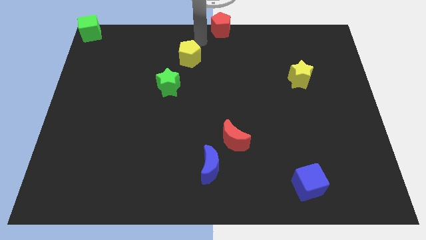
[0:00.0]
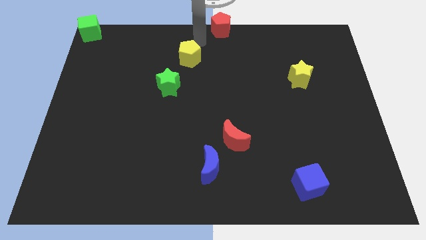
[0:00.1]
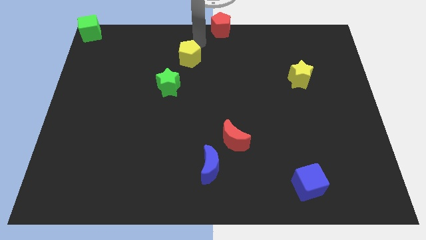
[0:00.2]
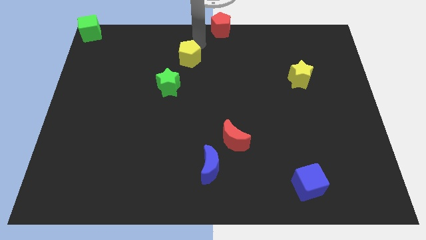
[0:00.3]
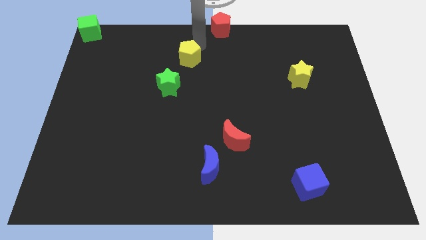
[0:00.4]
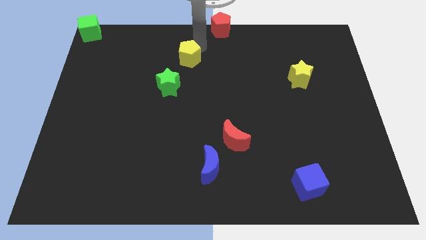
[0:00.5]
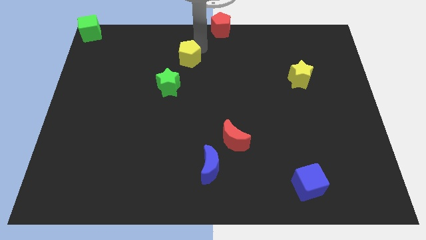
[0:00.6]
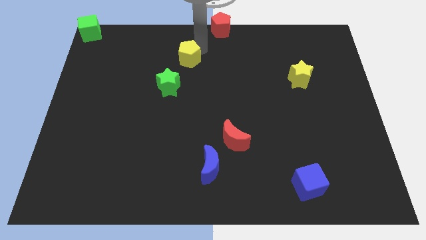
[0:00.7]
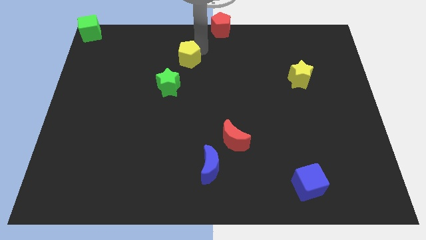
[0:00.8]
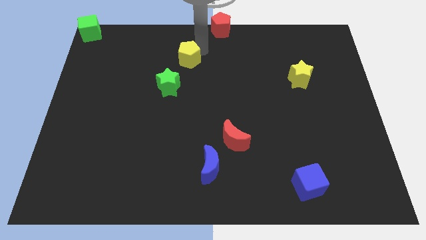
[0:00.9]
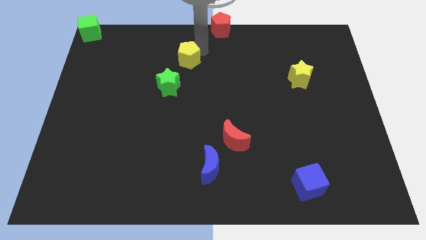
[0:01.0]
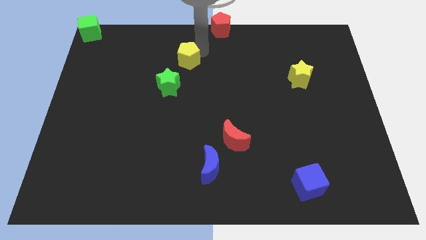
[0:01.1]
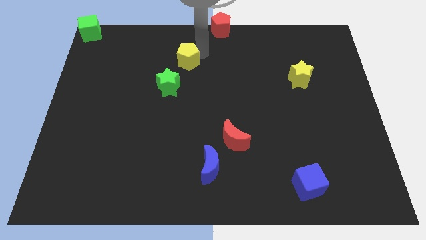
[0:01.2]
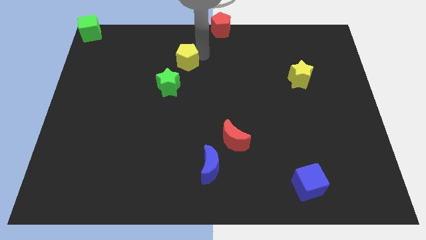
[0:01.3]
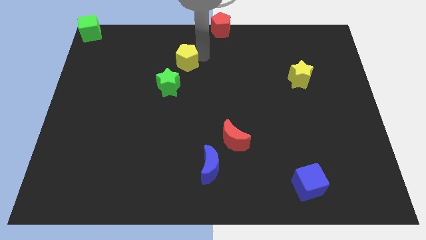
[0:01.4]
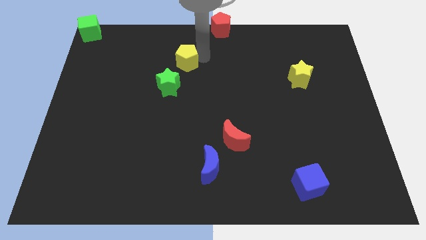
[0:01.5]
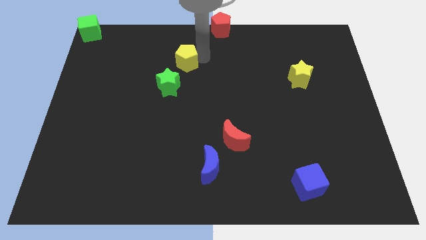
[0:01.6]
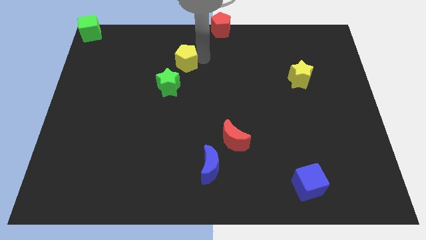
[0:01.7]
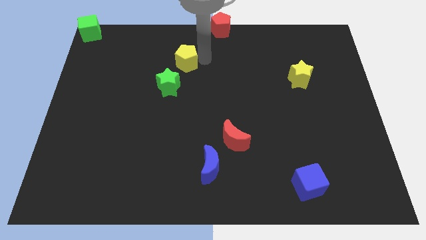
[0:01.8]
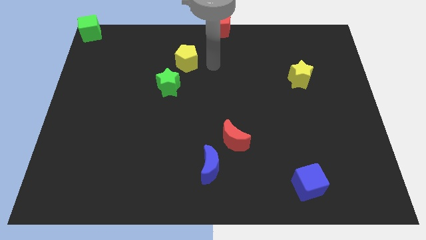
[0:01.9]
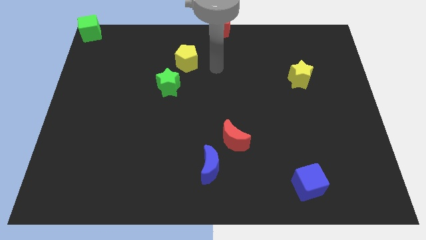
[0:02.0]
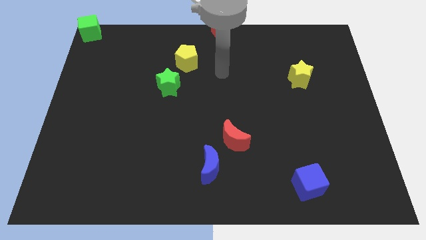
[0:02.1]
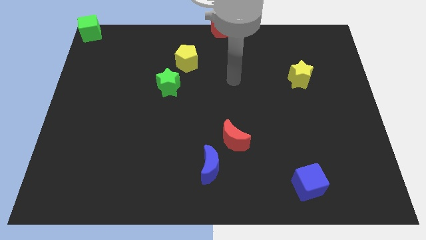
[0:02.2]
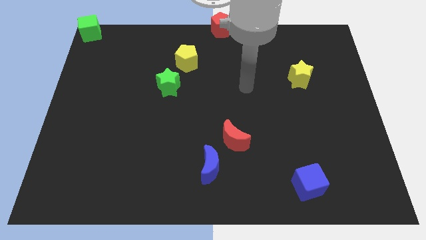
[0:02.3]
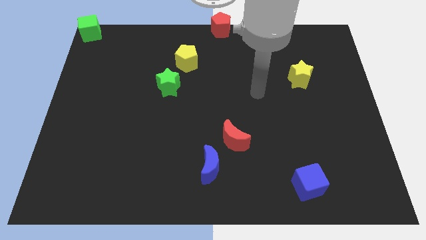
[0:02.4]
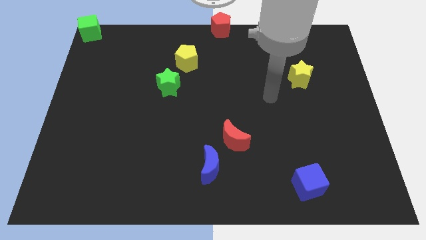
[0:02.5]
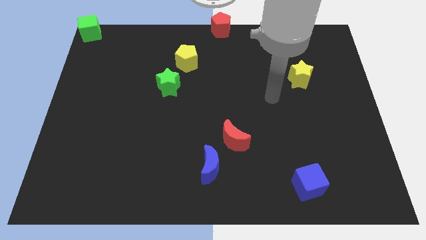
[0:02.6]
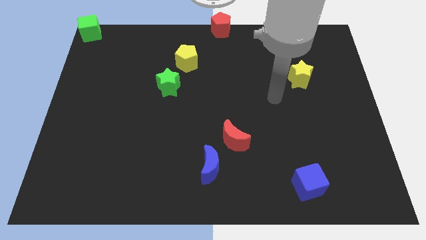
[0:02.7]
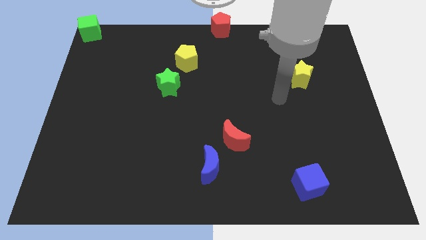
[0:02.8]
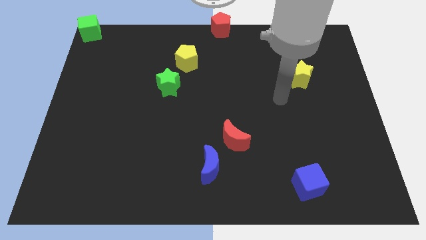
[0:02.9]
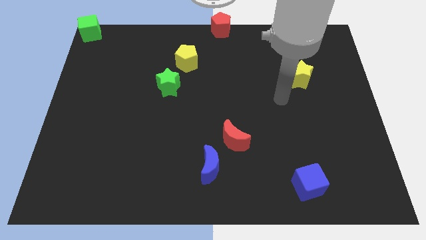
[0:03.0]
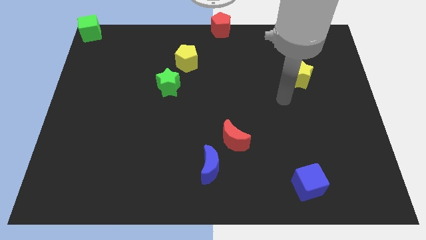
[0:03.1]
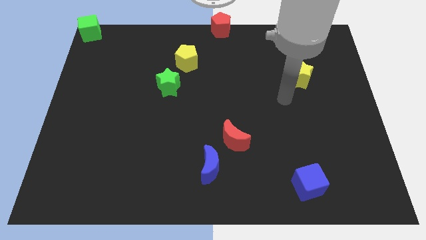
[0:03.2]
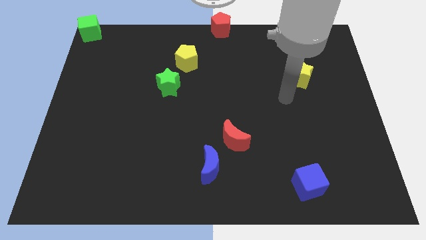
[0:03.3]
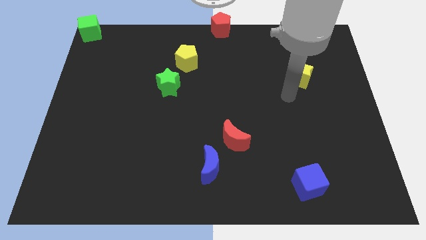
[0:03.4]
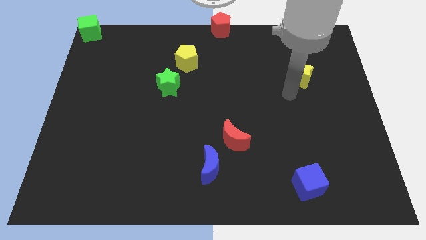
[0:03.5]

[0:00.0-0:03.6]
slightly move the yellow pentagon diagonally to red crescent

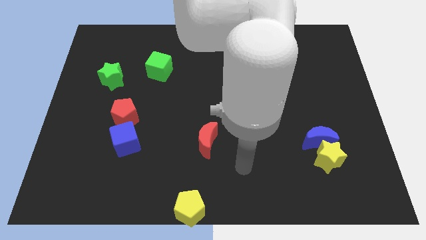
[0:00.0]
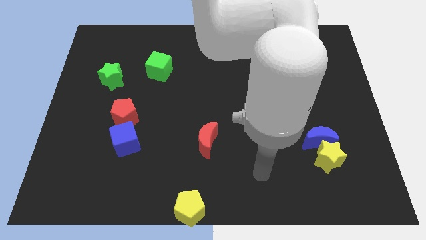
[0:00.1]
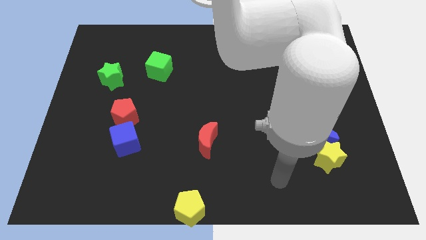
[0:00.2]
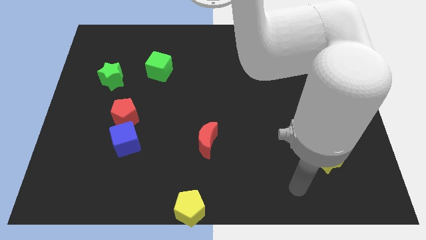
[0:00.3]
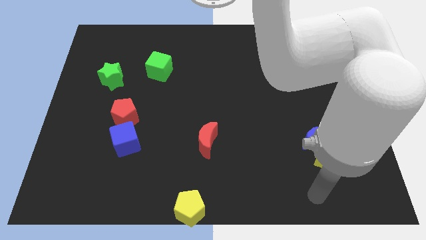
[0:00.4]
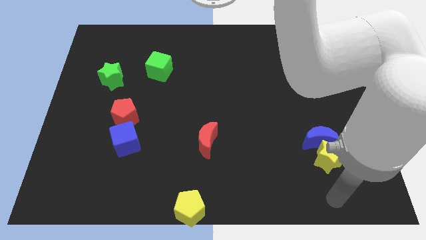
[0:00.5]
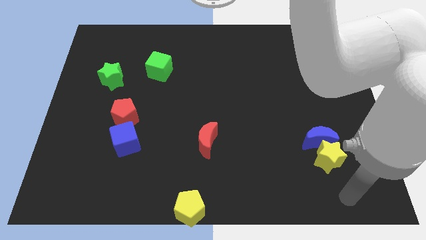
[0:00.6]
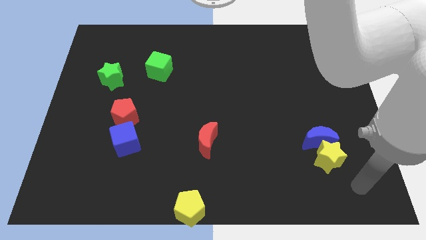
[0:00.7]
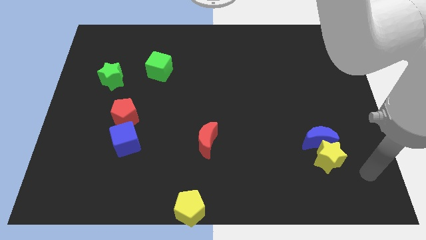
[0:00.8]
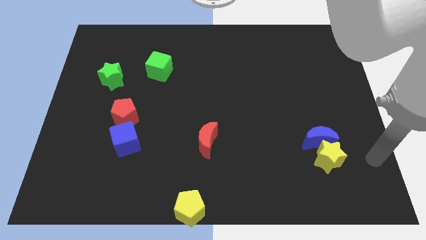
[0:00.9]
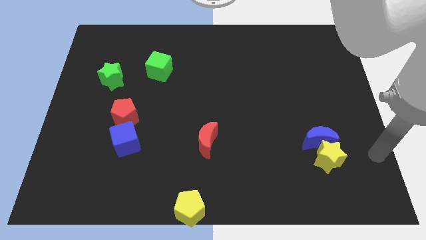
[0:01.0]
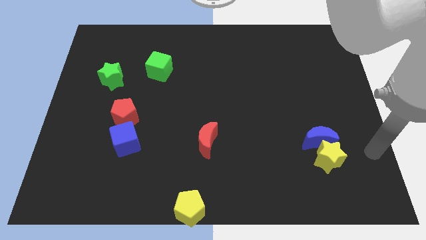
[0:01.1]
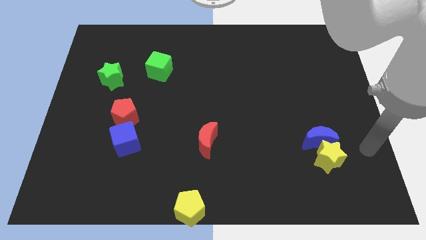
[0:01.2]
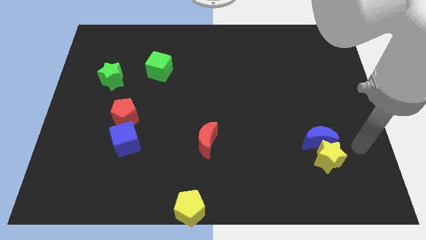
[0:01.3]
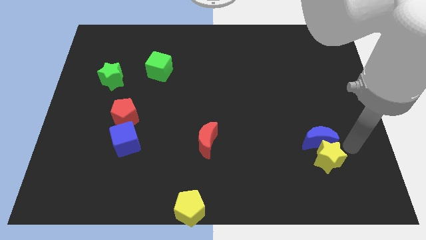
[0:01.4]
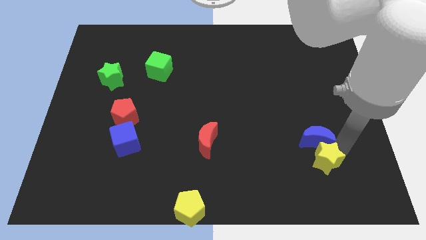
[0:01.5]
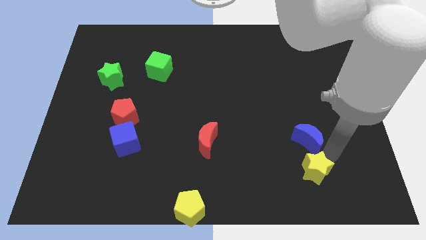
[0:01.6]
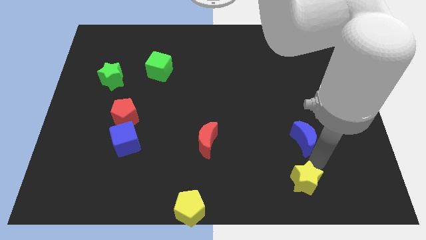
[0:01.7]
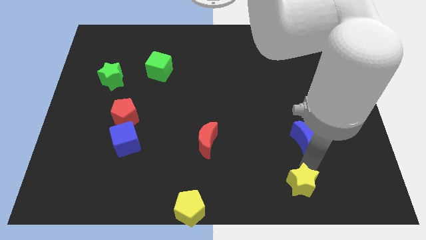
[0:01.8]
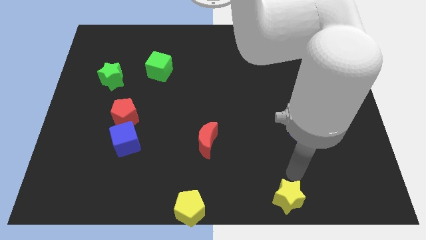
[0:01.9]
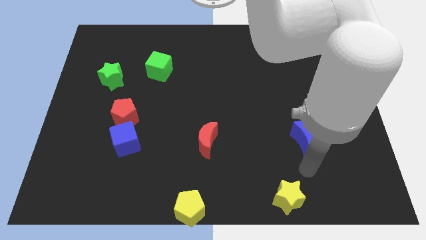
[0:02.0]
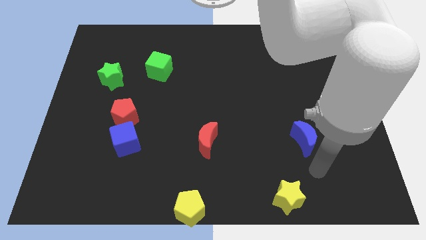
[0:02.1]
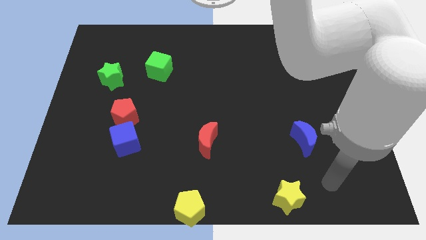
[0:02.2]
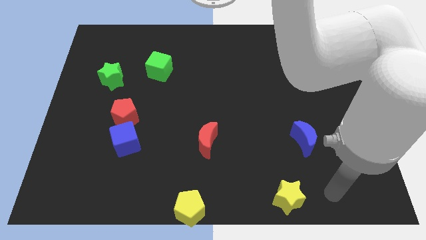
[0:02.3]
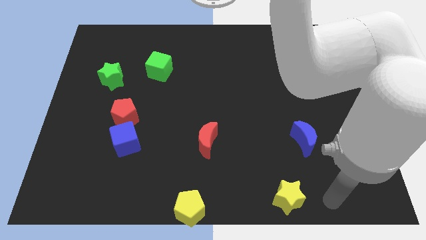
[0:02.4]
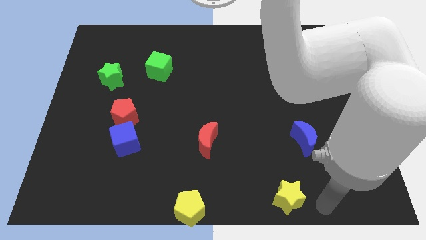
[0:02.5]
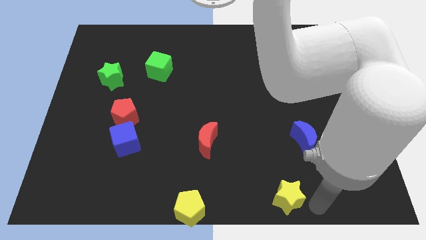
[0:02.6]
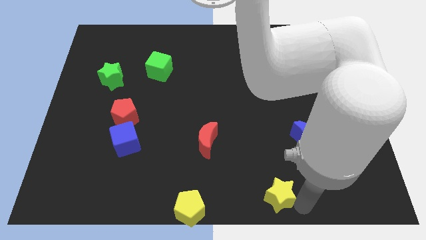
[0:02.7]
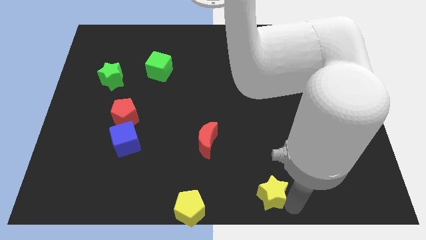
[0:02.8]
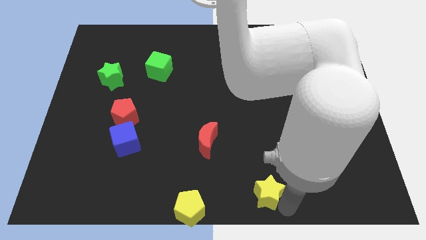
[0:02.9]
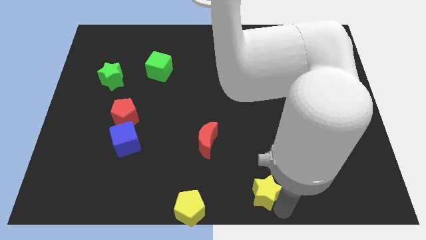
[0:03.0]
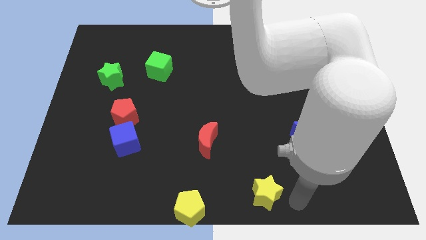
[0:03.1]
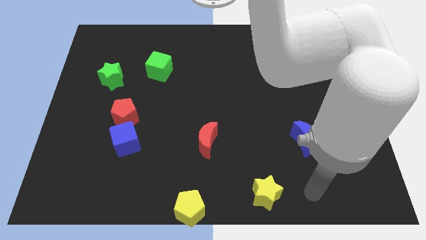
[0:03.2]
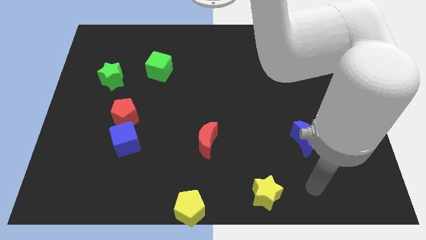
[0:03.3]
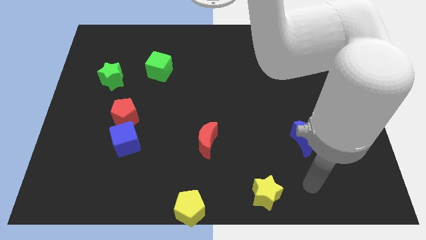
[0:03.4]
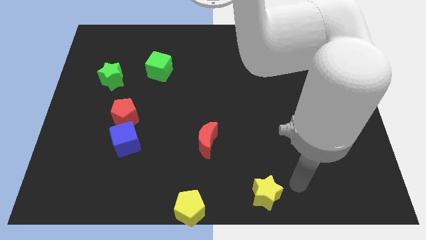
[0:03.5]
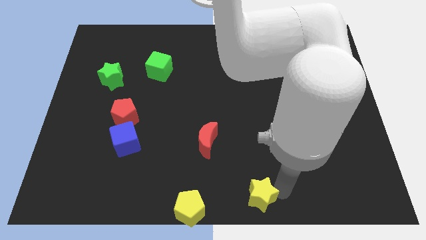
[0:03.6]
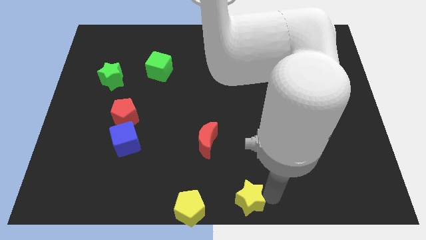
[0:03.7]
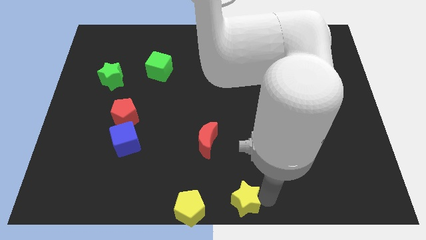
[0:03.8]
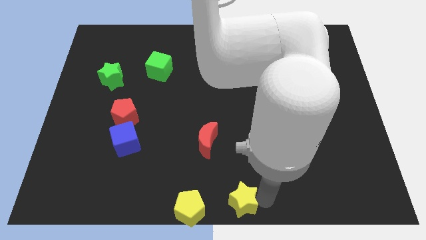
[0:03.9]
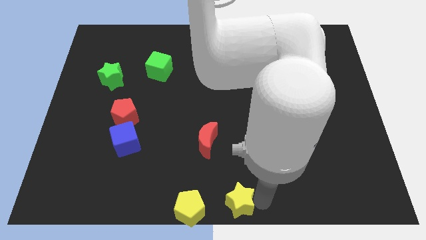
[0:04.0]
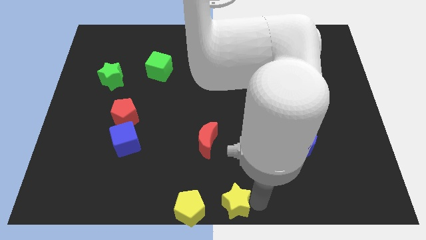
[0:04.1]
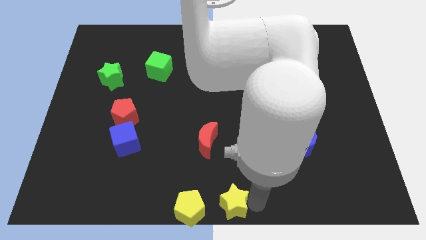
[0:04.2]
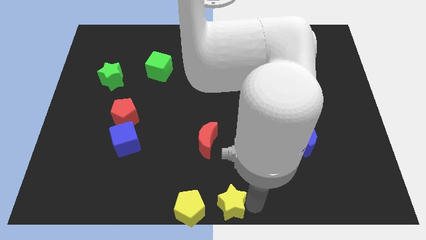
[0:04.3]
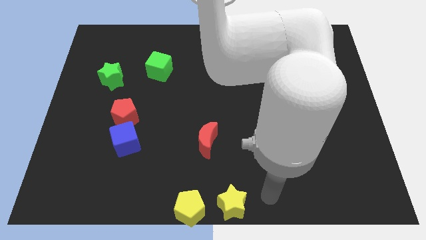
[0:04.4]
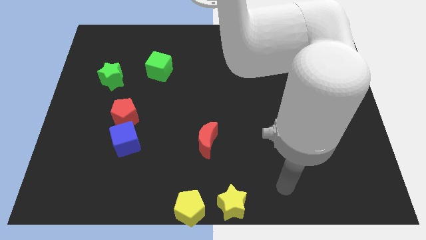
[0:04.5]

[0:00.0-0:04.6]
place the yellow star to the right of the yellow pentagon

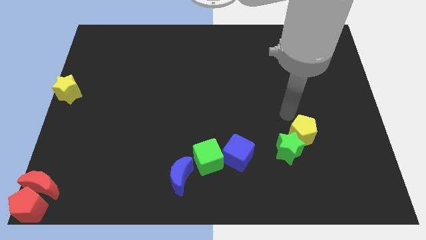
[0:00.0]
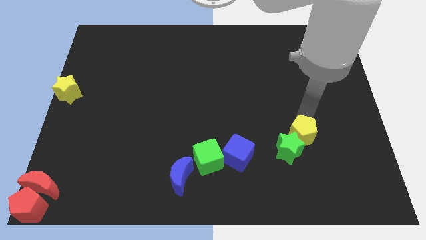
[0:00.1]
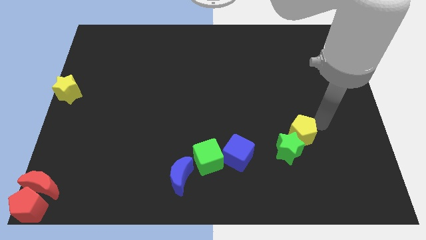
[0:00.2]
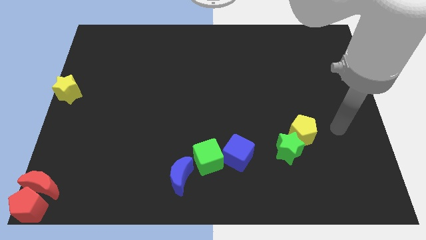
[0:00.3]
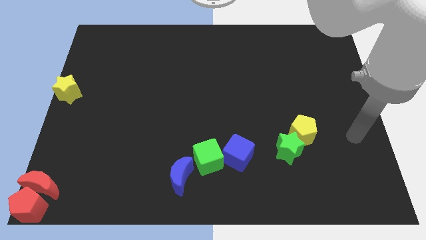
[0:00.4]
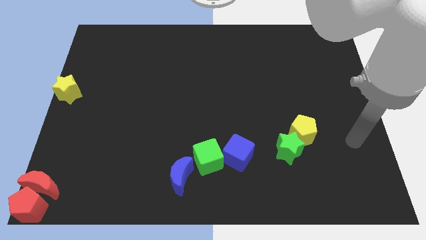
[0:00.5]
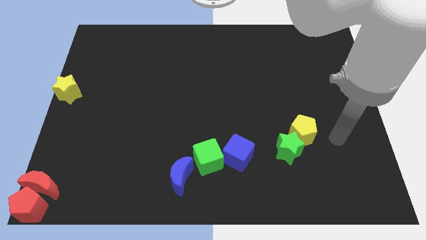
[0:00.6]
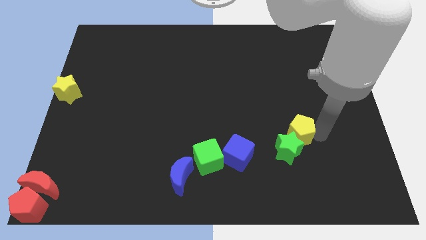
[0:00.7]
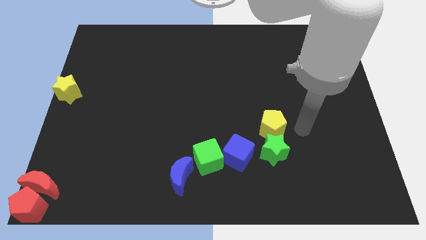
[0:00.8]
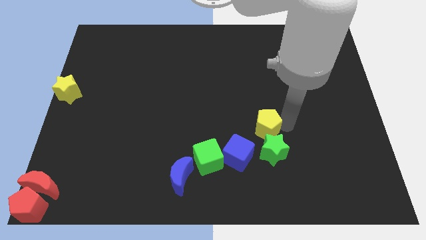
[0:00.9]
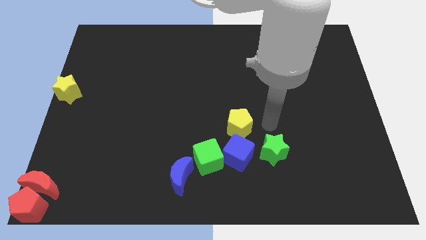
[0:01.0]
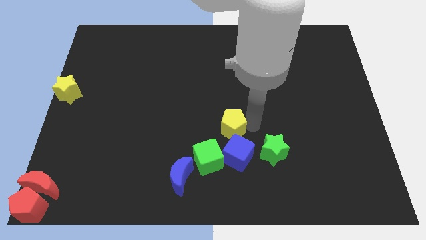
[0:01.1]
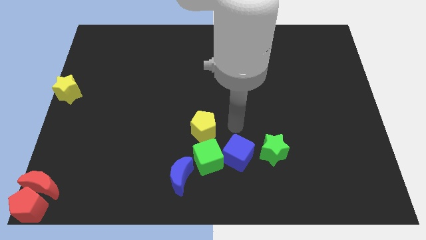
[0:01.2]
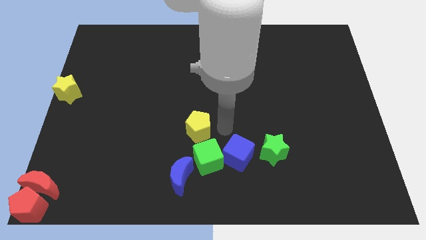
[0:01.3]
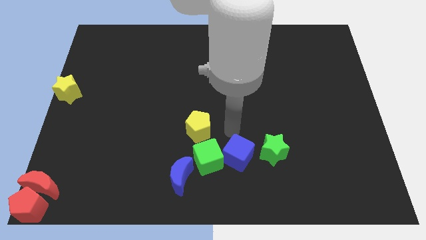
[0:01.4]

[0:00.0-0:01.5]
place the yellow pentagon diagonally left above the green cube
